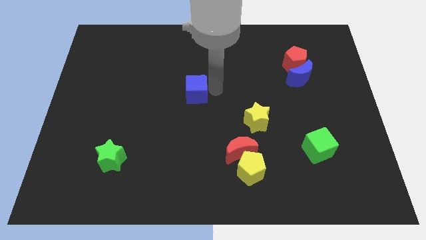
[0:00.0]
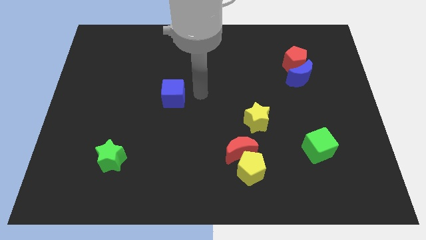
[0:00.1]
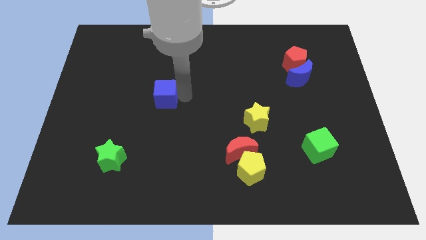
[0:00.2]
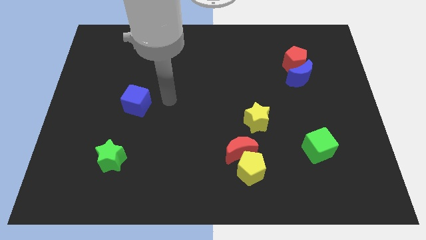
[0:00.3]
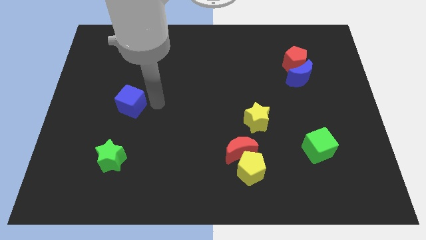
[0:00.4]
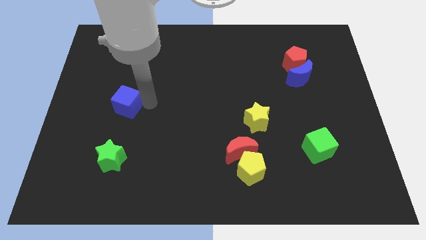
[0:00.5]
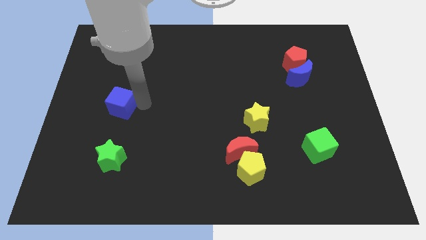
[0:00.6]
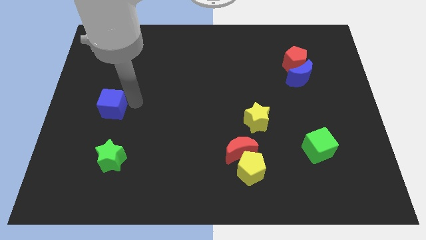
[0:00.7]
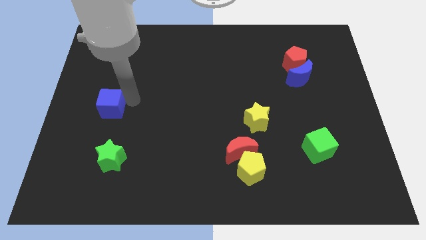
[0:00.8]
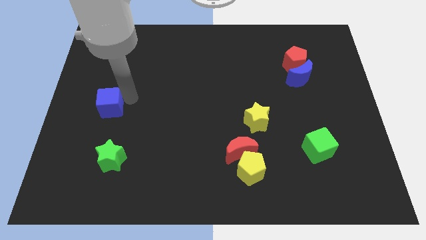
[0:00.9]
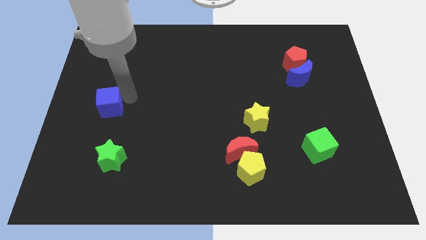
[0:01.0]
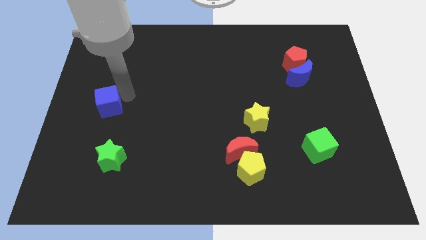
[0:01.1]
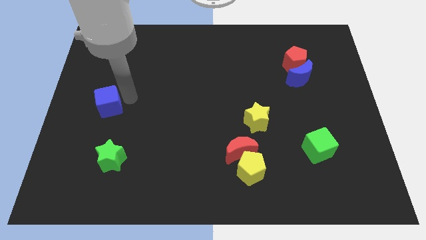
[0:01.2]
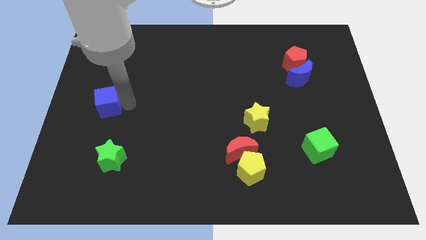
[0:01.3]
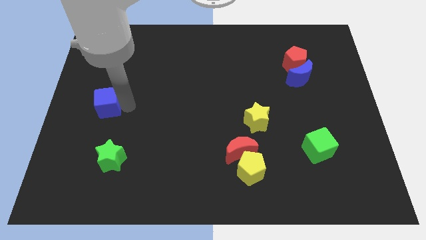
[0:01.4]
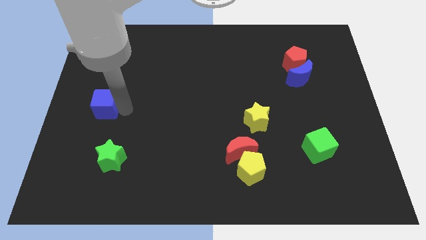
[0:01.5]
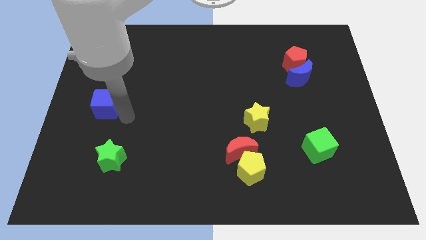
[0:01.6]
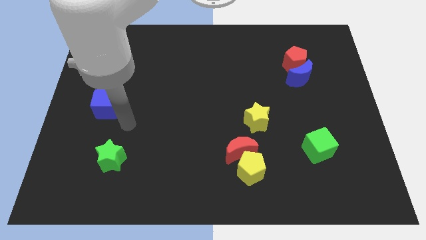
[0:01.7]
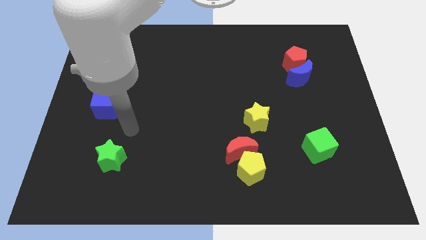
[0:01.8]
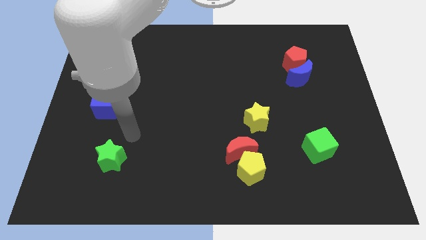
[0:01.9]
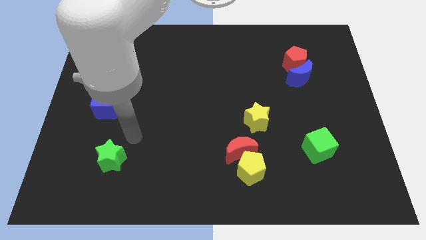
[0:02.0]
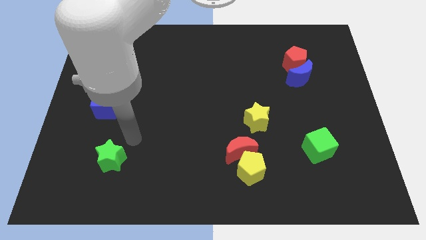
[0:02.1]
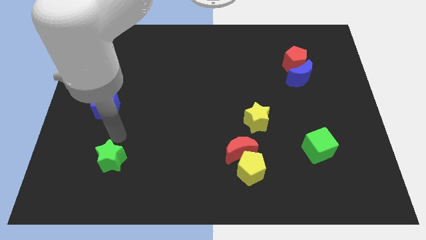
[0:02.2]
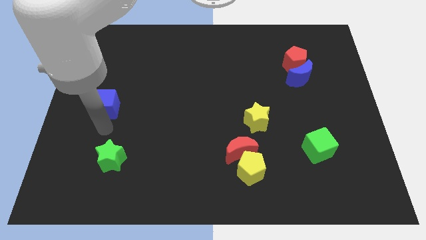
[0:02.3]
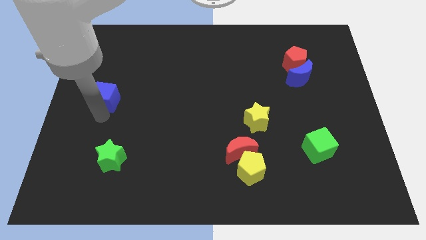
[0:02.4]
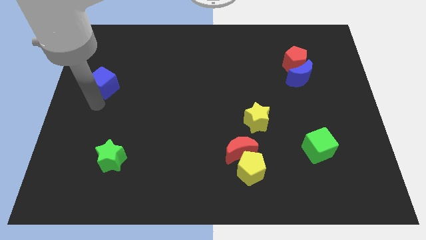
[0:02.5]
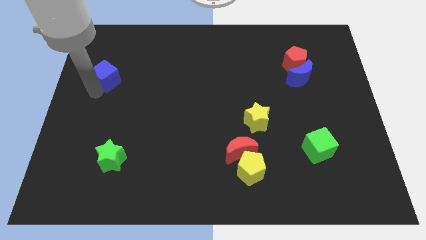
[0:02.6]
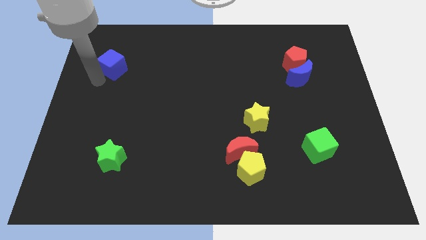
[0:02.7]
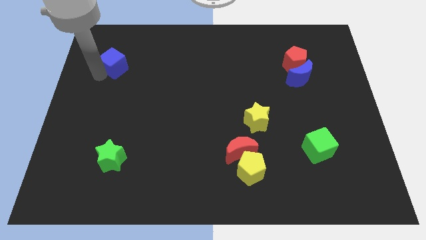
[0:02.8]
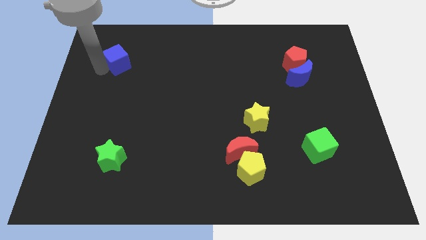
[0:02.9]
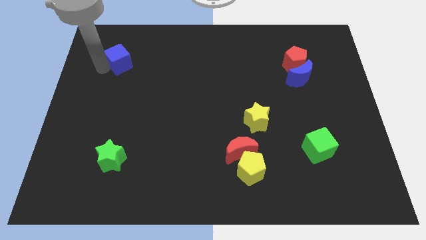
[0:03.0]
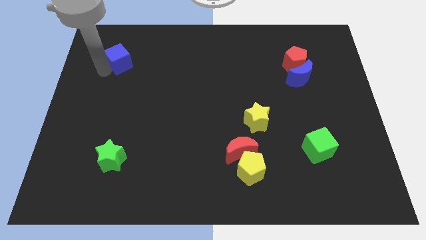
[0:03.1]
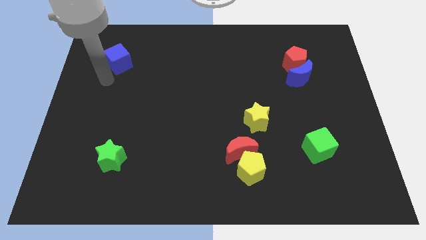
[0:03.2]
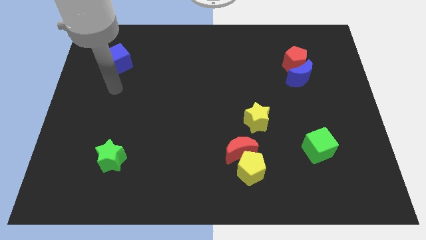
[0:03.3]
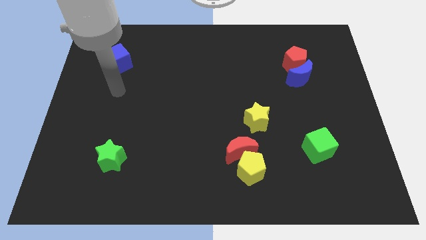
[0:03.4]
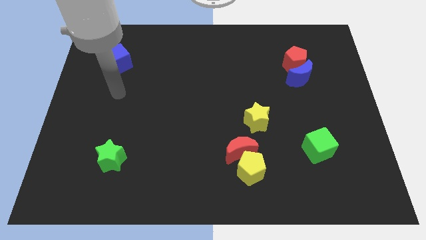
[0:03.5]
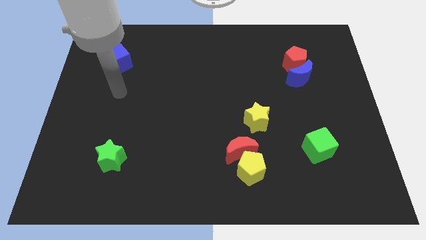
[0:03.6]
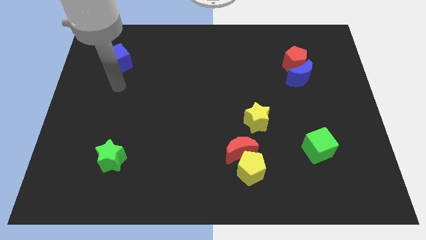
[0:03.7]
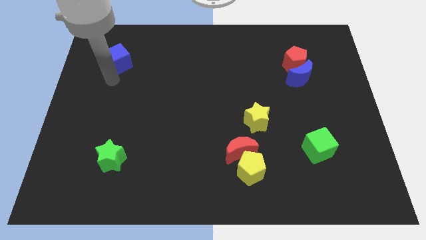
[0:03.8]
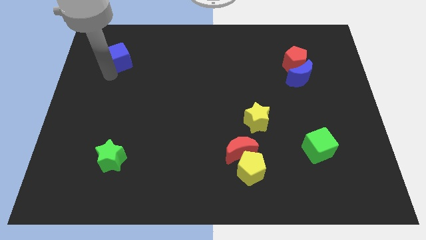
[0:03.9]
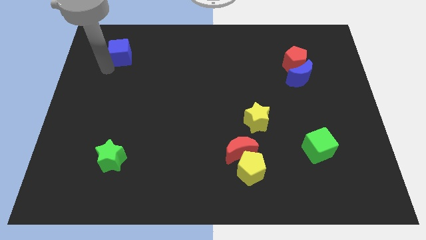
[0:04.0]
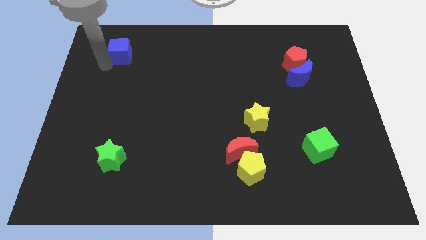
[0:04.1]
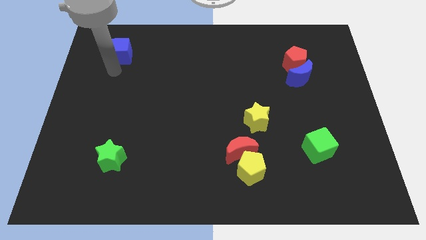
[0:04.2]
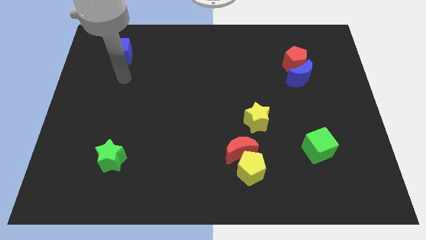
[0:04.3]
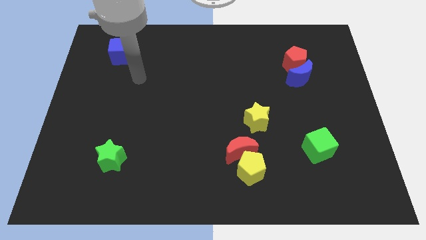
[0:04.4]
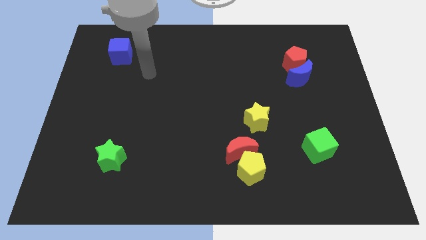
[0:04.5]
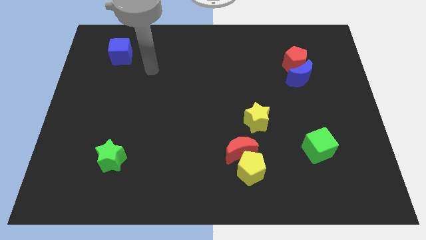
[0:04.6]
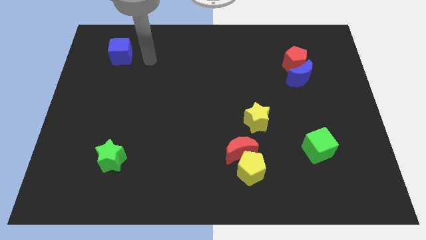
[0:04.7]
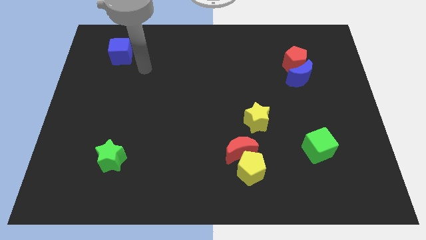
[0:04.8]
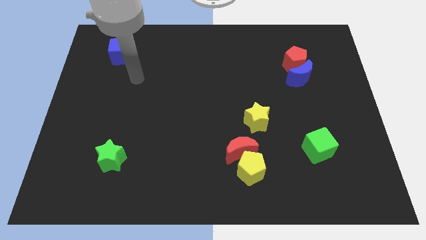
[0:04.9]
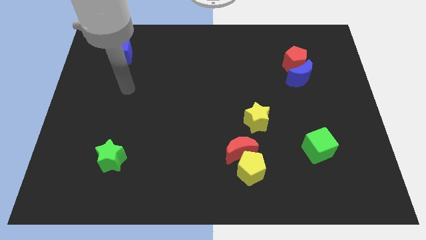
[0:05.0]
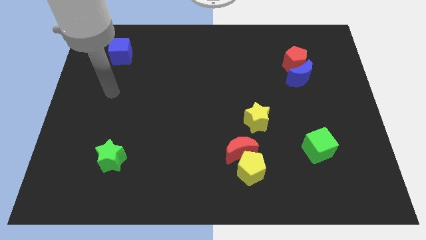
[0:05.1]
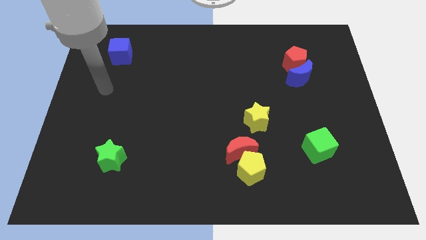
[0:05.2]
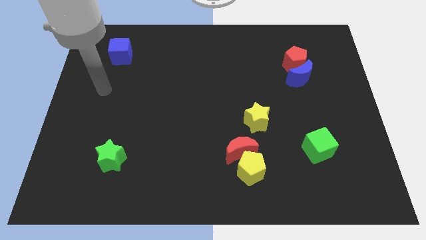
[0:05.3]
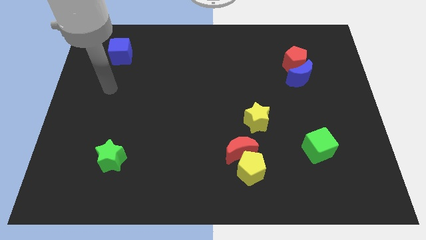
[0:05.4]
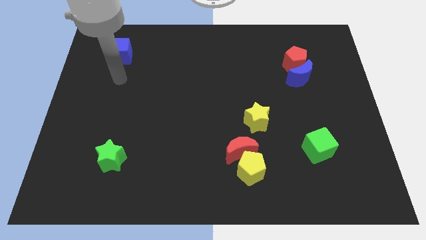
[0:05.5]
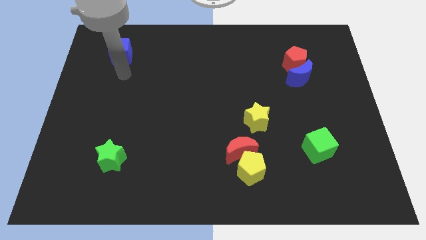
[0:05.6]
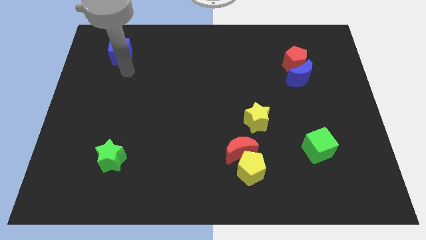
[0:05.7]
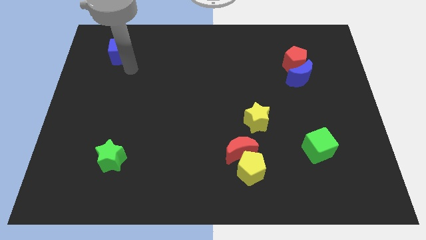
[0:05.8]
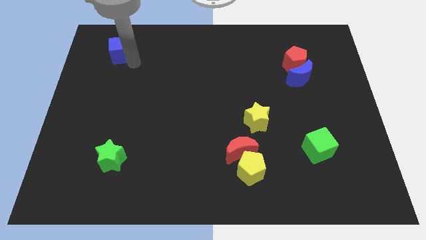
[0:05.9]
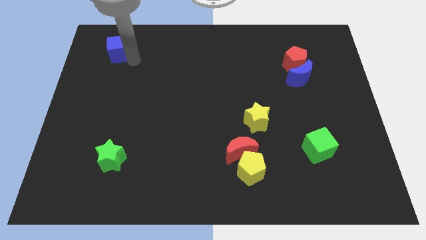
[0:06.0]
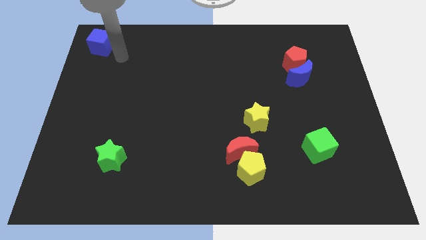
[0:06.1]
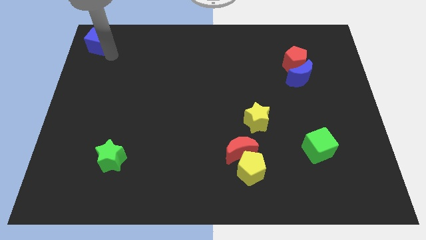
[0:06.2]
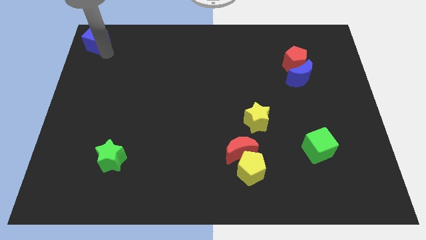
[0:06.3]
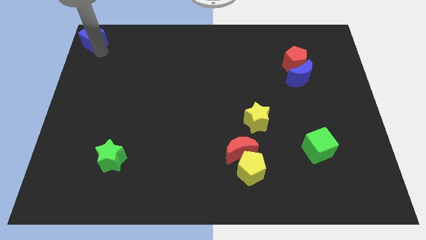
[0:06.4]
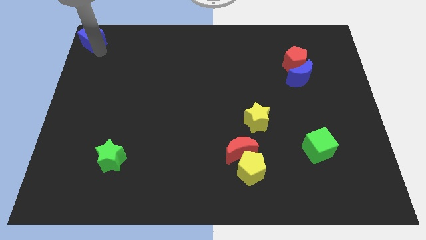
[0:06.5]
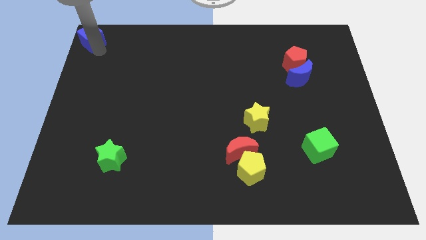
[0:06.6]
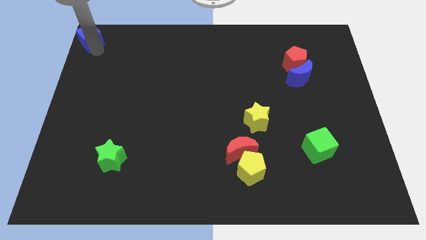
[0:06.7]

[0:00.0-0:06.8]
place the blue cube to the top left corner

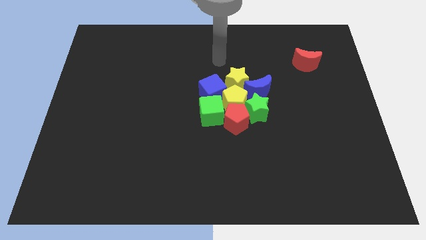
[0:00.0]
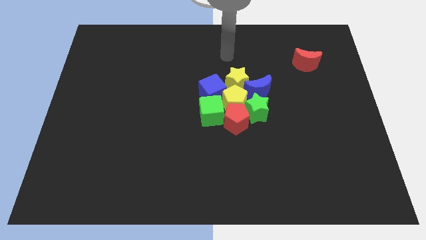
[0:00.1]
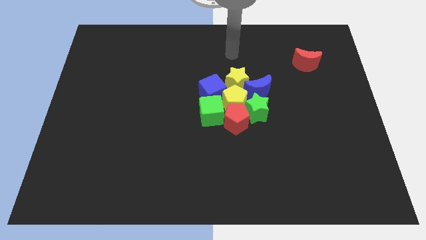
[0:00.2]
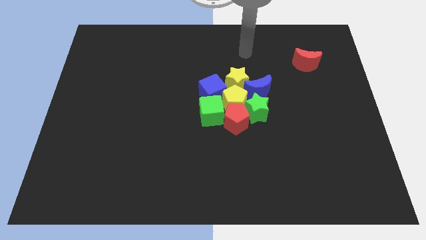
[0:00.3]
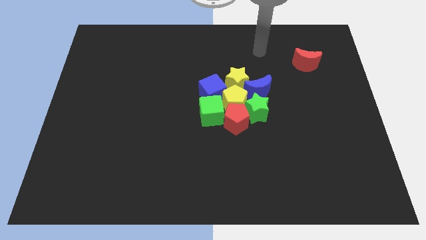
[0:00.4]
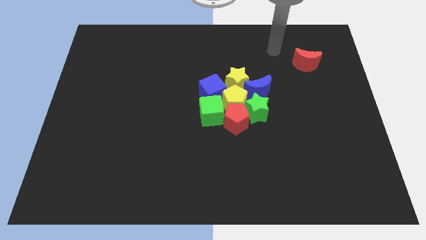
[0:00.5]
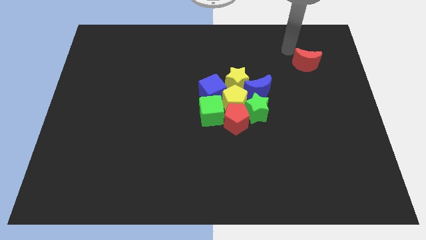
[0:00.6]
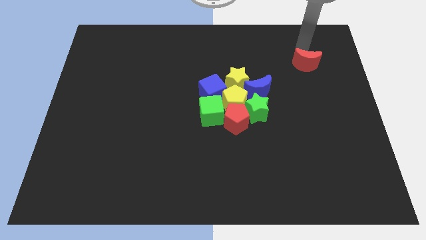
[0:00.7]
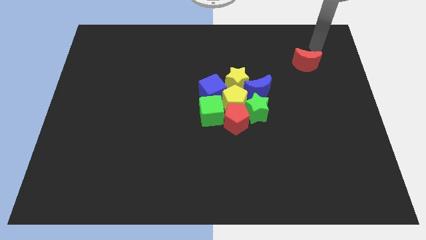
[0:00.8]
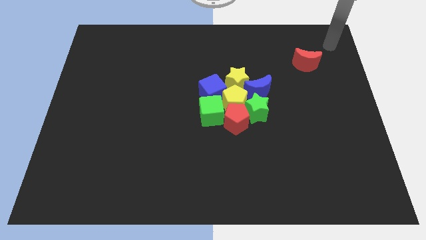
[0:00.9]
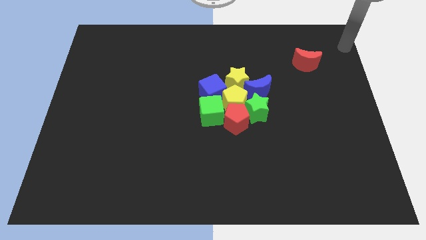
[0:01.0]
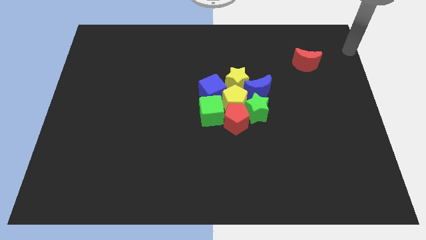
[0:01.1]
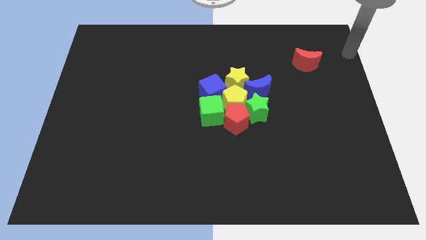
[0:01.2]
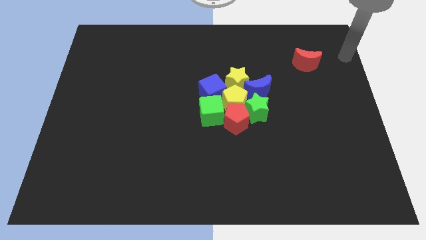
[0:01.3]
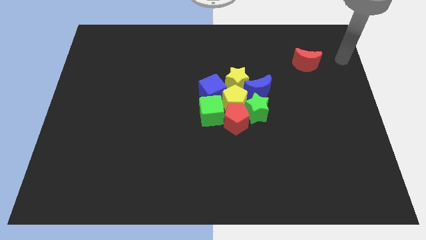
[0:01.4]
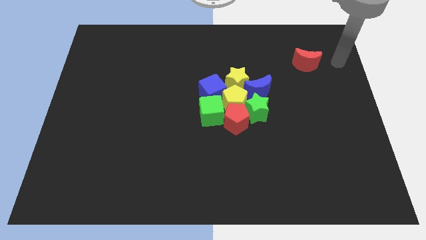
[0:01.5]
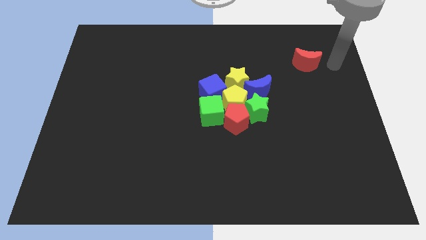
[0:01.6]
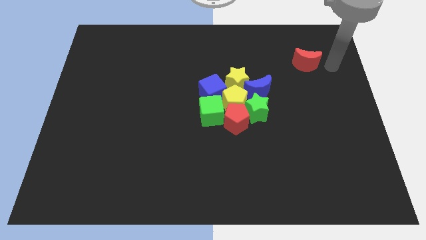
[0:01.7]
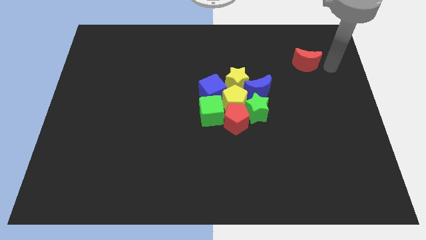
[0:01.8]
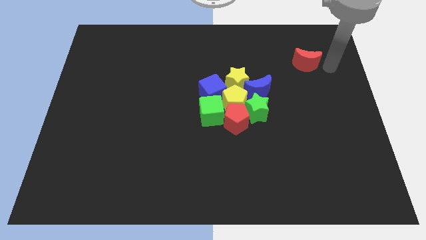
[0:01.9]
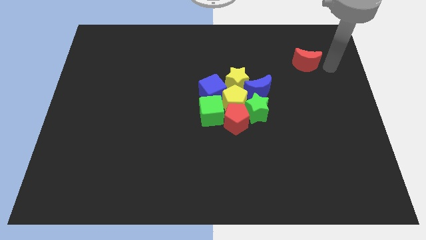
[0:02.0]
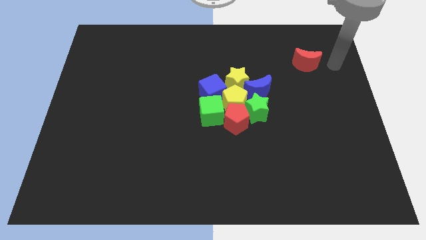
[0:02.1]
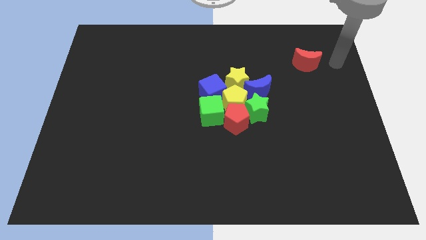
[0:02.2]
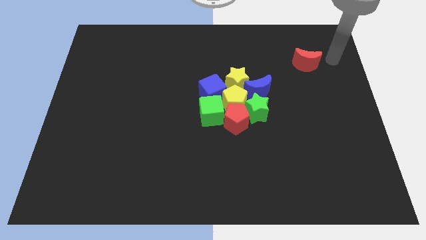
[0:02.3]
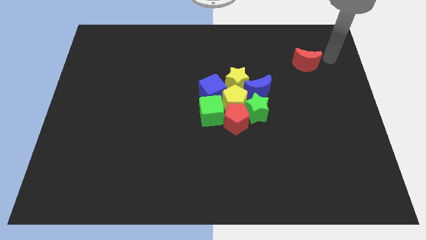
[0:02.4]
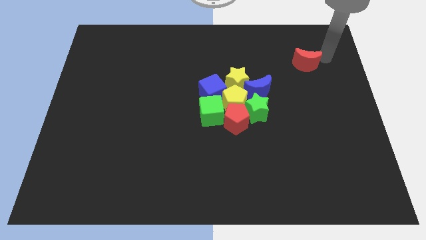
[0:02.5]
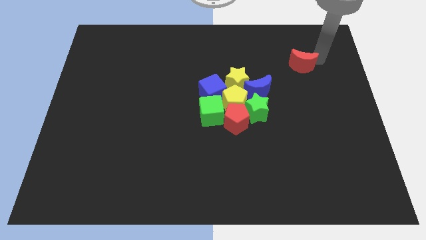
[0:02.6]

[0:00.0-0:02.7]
tap the red crescent
